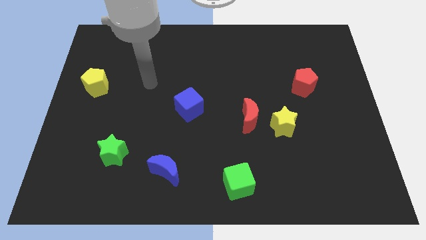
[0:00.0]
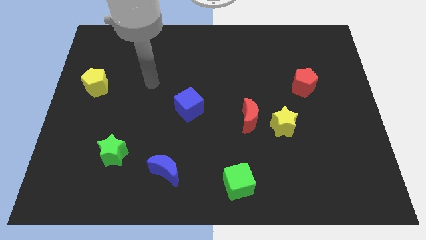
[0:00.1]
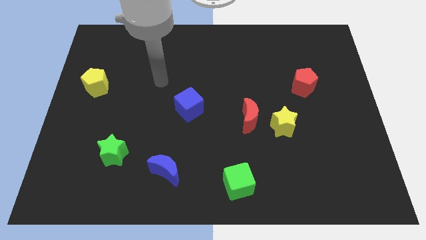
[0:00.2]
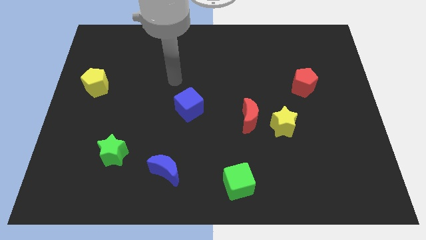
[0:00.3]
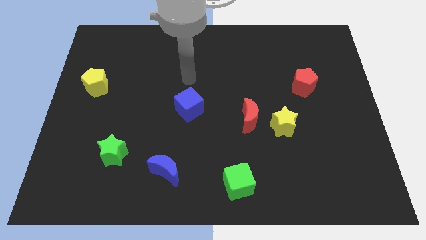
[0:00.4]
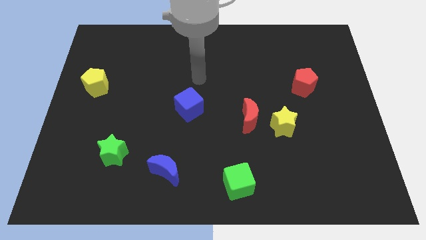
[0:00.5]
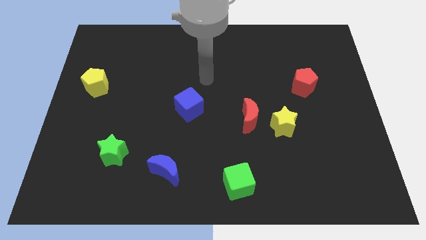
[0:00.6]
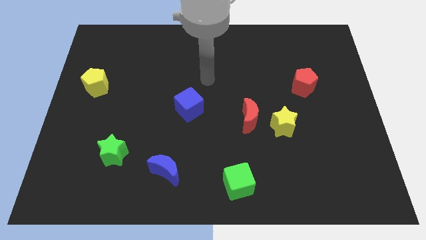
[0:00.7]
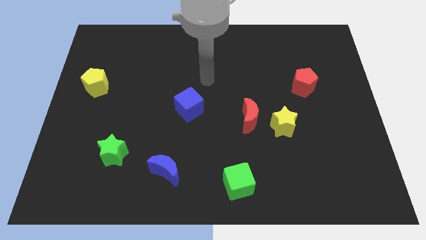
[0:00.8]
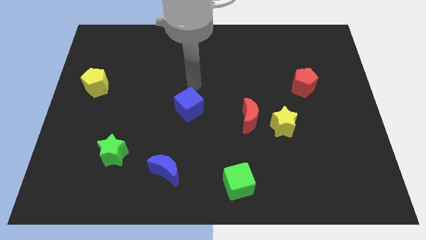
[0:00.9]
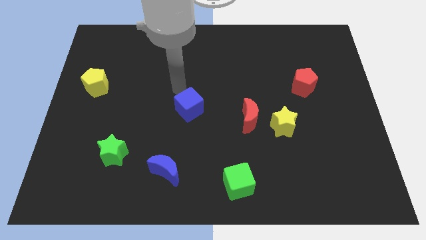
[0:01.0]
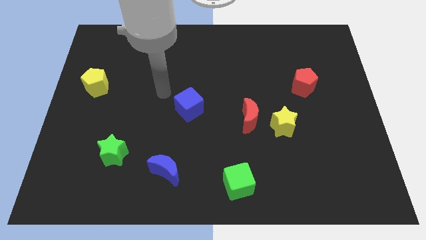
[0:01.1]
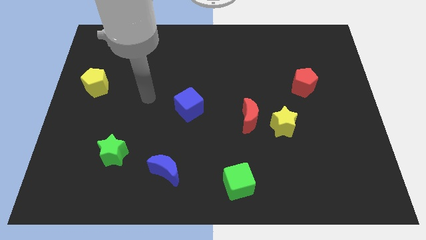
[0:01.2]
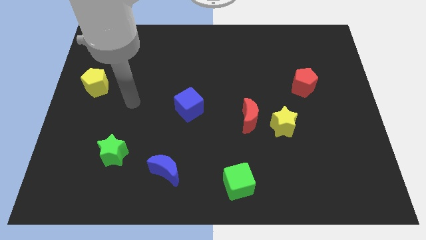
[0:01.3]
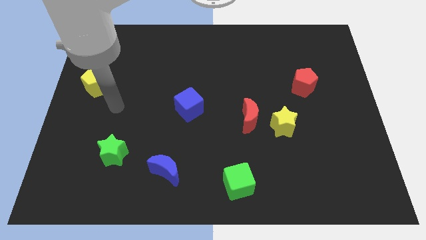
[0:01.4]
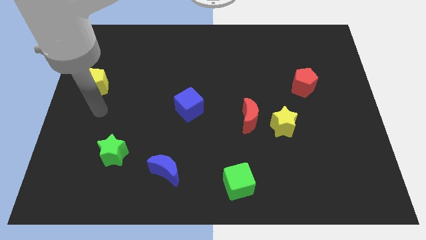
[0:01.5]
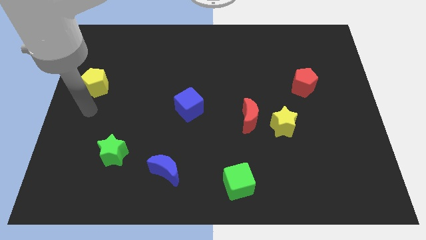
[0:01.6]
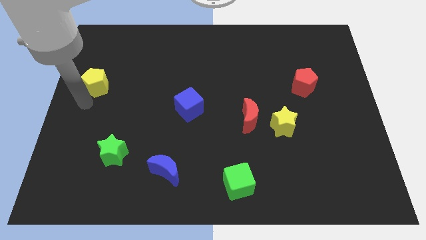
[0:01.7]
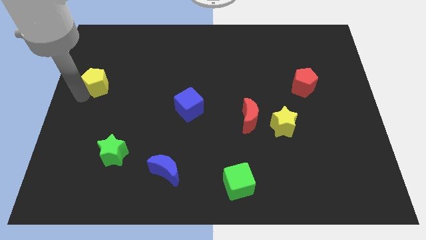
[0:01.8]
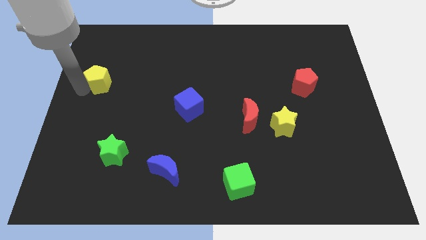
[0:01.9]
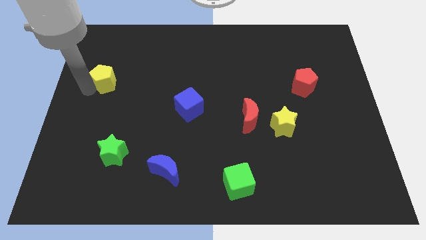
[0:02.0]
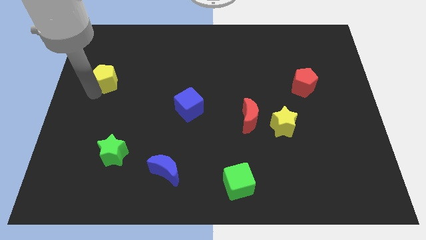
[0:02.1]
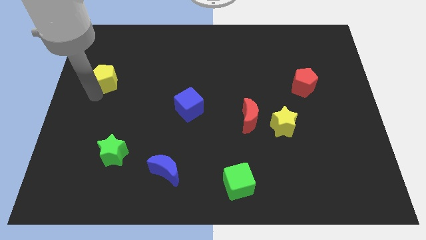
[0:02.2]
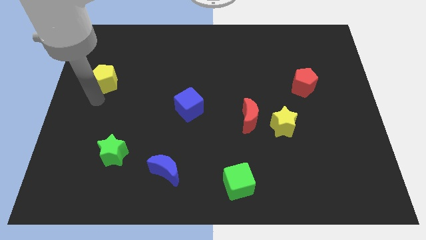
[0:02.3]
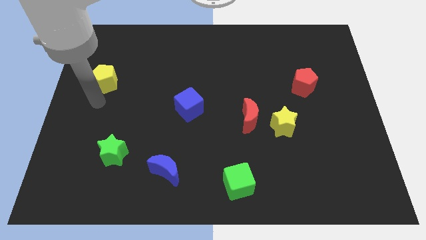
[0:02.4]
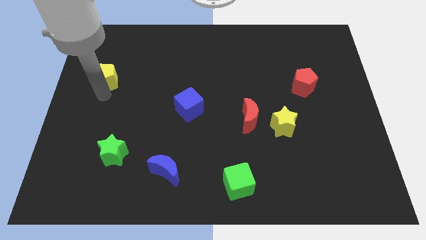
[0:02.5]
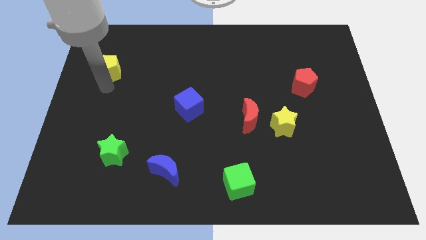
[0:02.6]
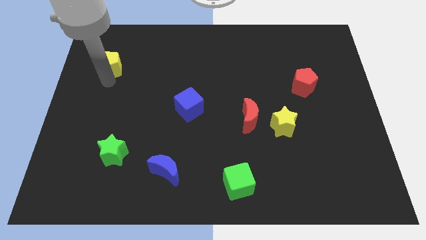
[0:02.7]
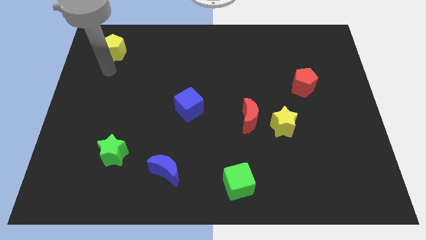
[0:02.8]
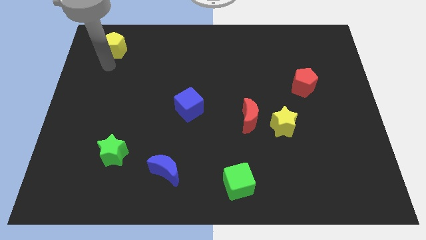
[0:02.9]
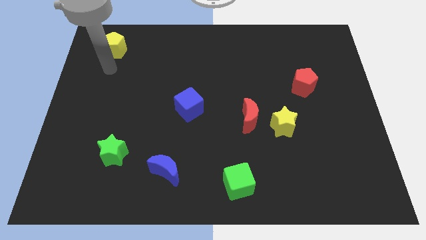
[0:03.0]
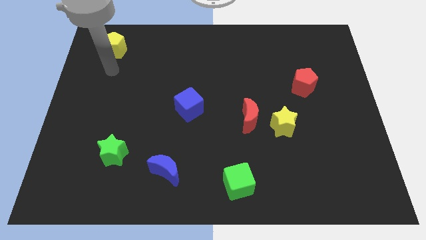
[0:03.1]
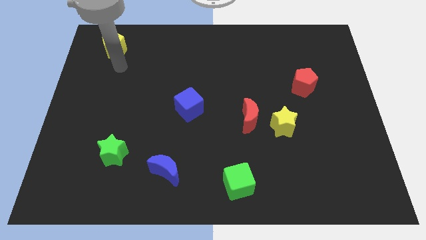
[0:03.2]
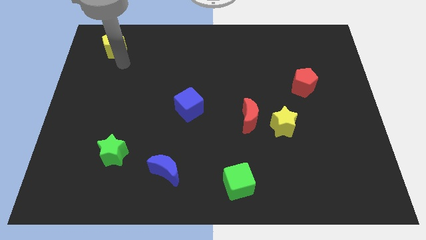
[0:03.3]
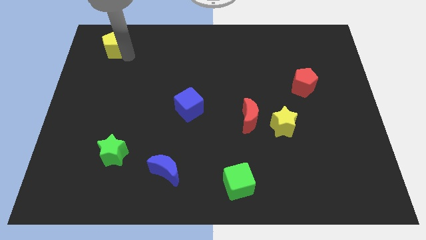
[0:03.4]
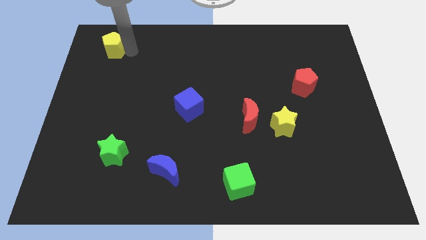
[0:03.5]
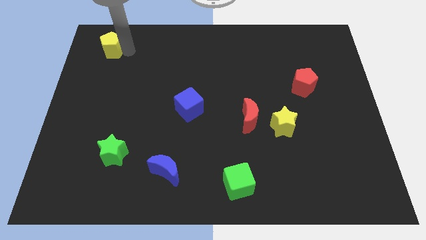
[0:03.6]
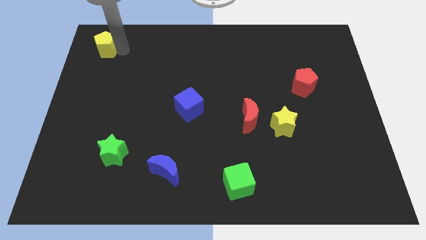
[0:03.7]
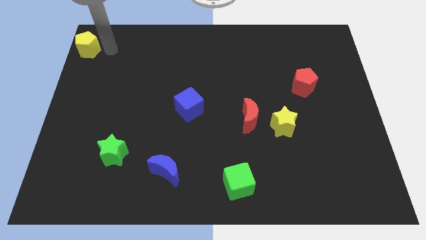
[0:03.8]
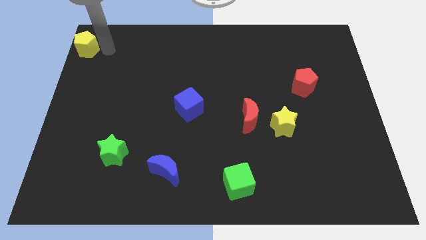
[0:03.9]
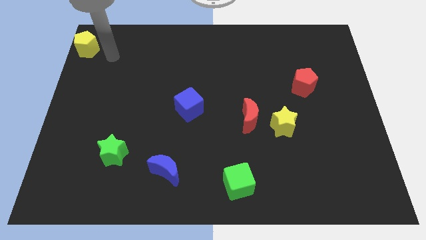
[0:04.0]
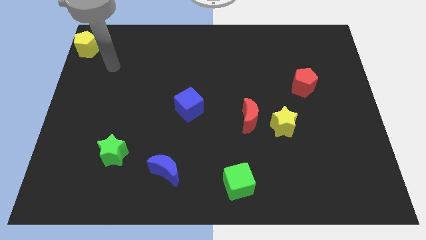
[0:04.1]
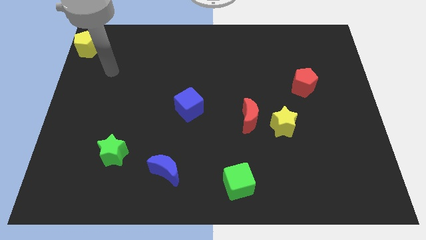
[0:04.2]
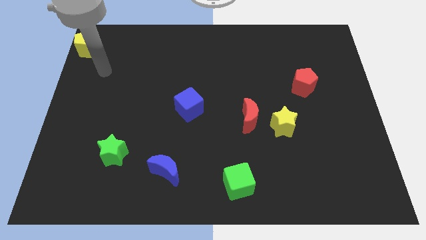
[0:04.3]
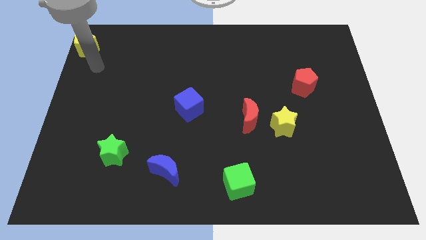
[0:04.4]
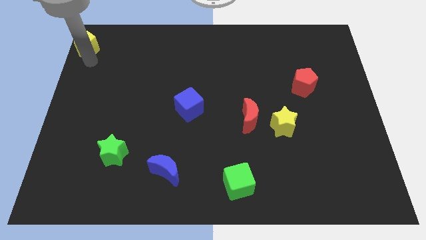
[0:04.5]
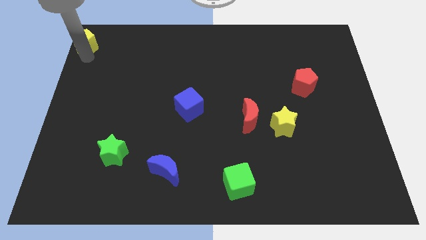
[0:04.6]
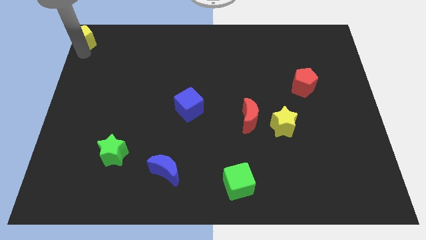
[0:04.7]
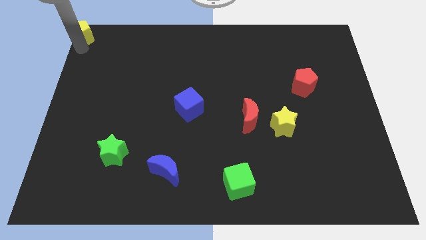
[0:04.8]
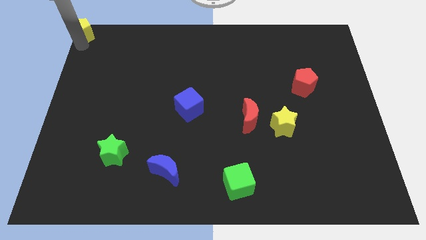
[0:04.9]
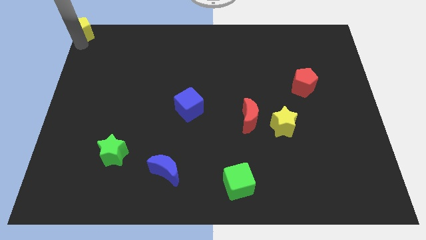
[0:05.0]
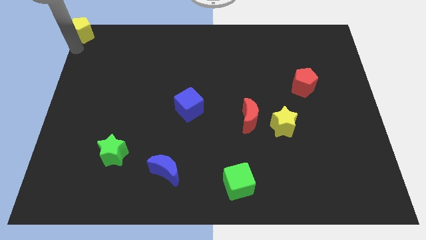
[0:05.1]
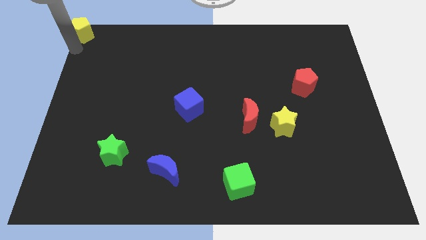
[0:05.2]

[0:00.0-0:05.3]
push the yellow pentagon diagonally to red pentagon

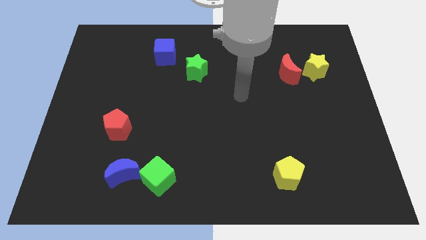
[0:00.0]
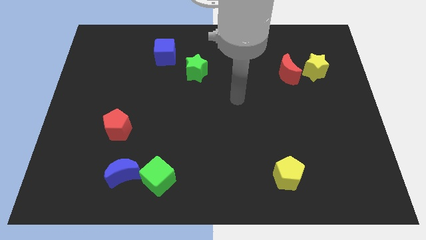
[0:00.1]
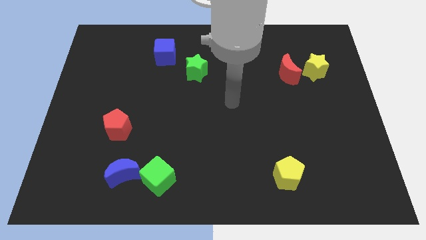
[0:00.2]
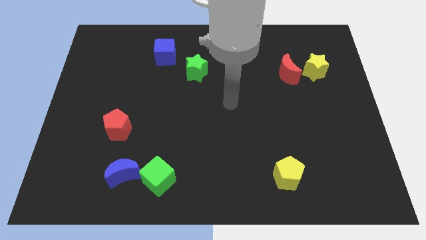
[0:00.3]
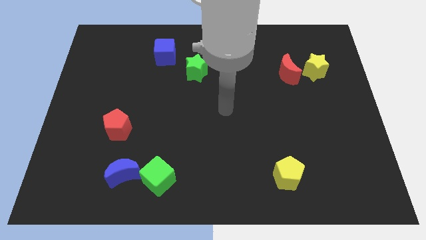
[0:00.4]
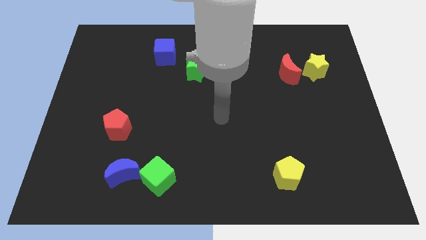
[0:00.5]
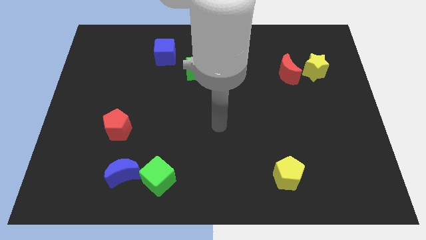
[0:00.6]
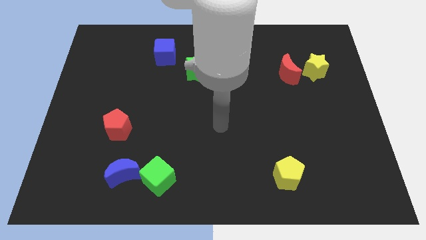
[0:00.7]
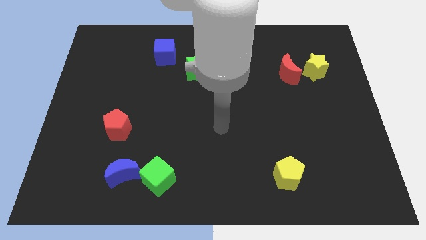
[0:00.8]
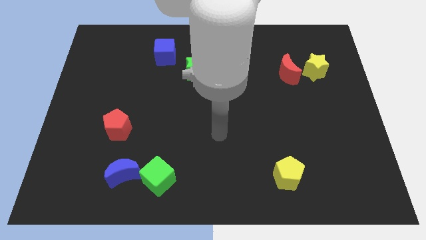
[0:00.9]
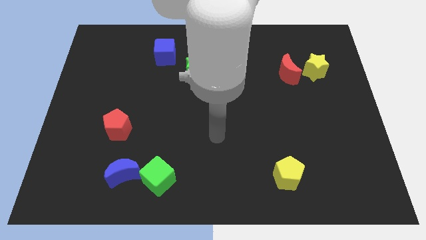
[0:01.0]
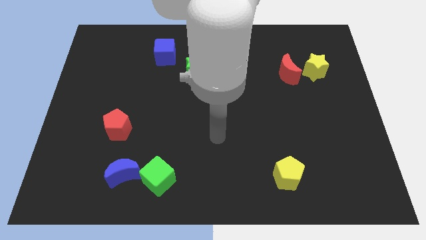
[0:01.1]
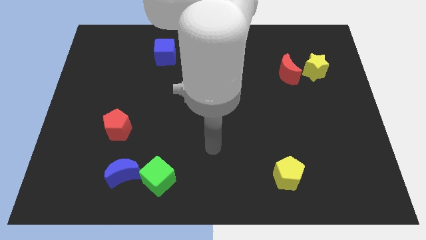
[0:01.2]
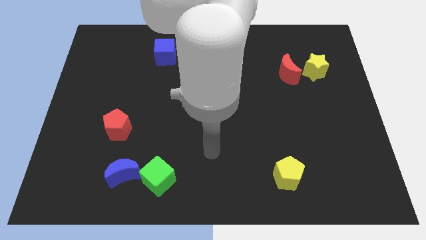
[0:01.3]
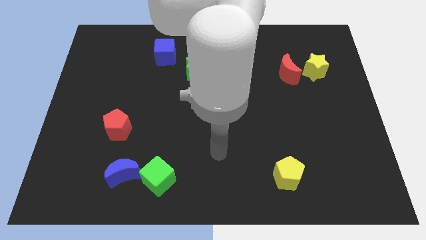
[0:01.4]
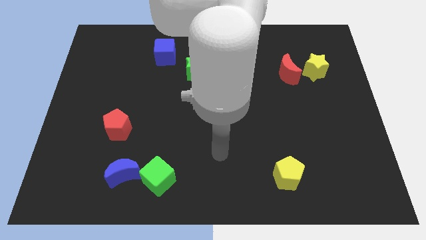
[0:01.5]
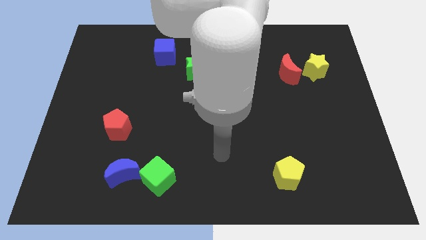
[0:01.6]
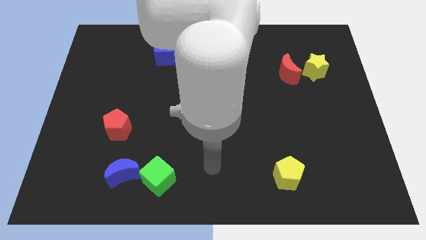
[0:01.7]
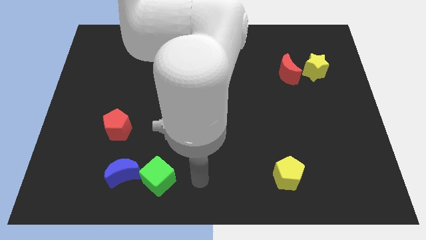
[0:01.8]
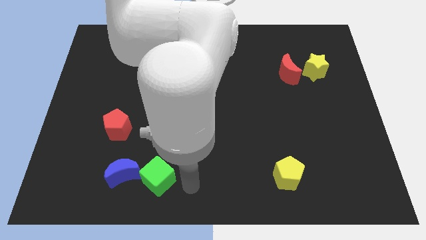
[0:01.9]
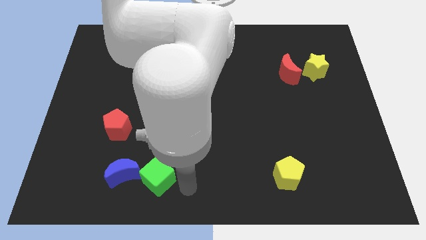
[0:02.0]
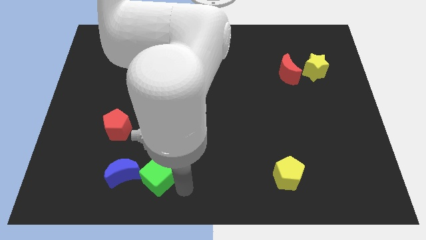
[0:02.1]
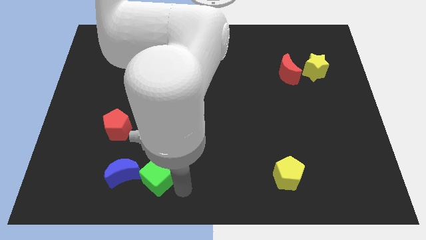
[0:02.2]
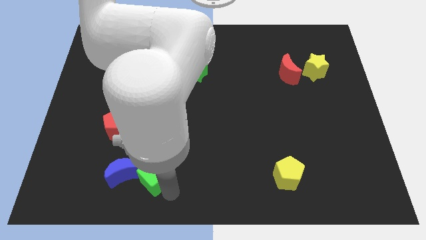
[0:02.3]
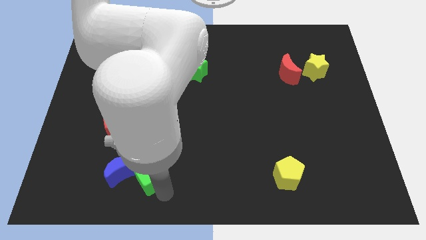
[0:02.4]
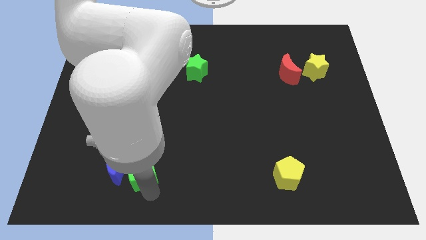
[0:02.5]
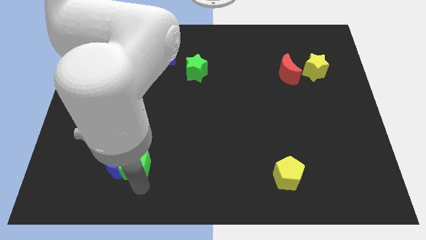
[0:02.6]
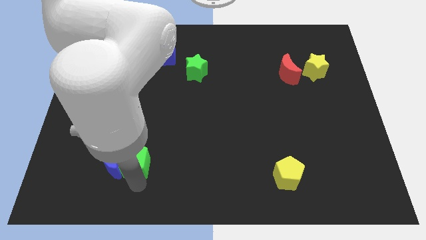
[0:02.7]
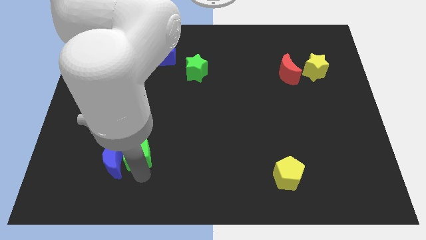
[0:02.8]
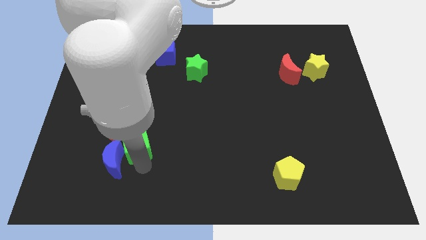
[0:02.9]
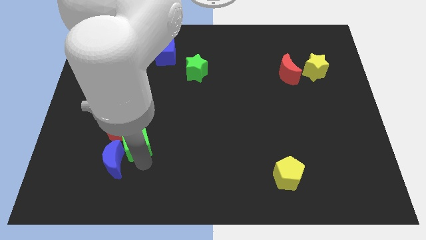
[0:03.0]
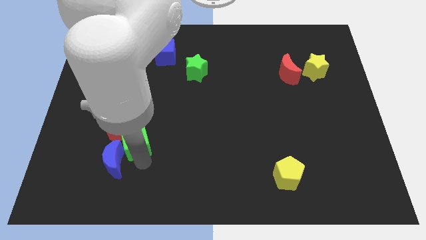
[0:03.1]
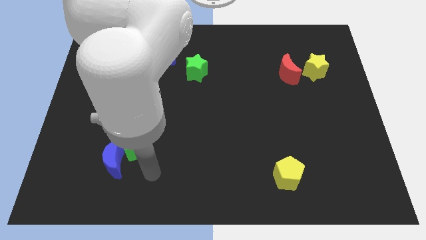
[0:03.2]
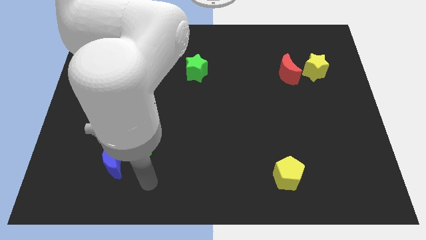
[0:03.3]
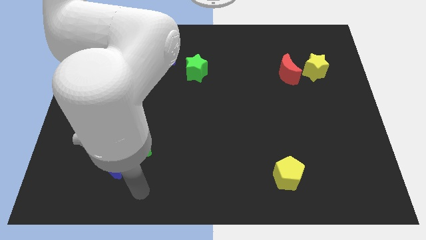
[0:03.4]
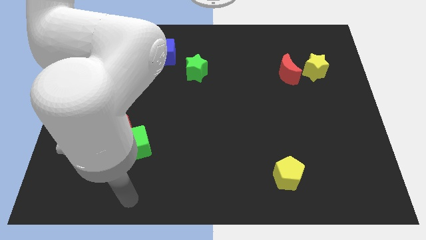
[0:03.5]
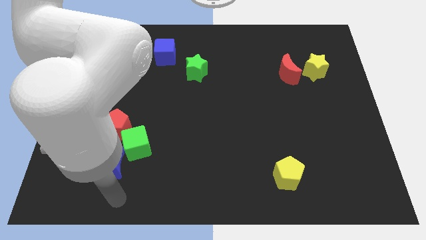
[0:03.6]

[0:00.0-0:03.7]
move green cube to the right of red pentagon and blue crescent
